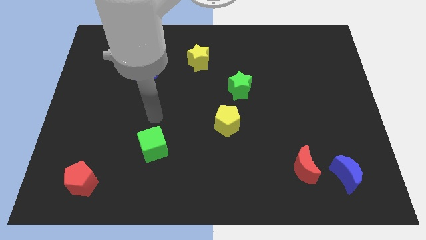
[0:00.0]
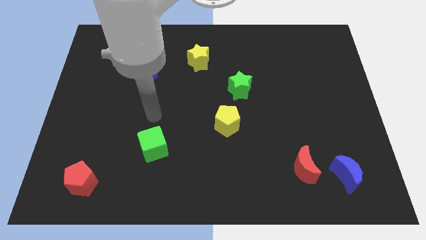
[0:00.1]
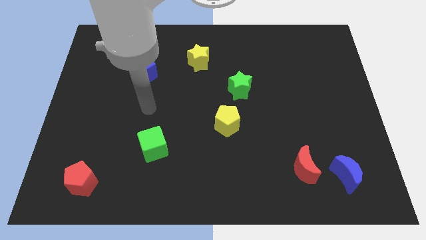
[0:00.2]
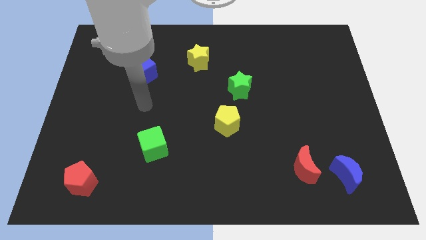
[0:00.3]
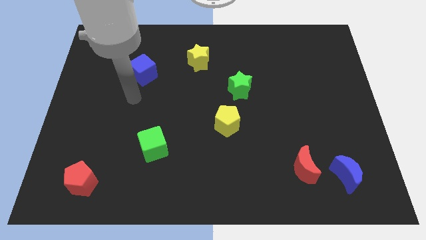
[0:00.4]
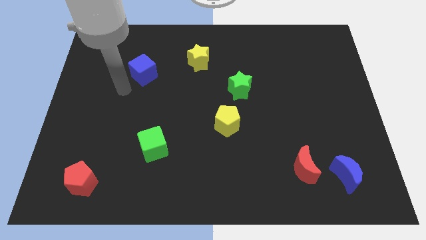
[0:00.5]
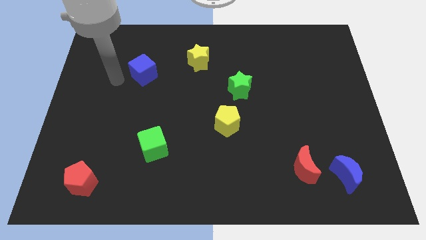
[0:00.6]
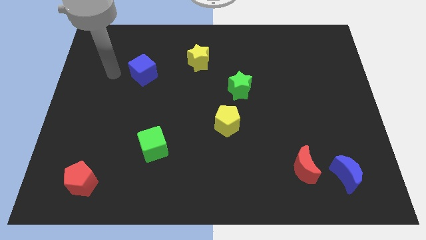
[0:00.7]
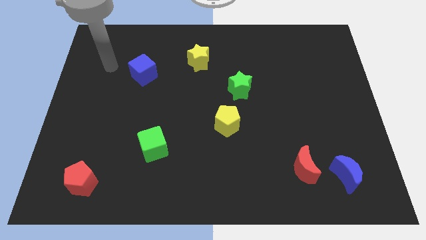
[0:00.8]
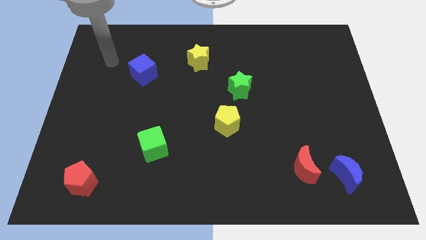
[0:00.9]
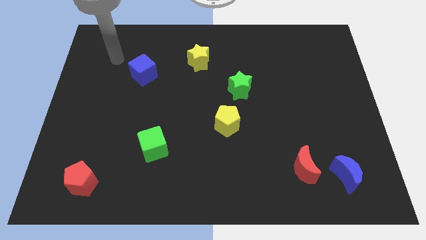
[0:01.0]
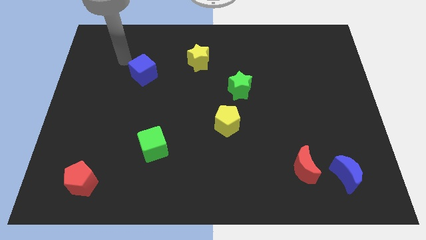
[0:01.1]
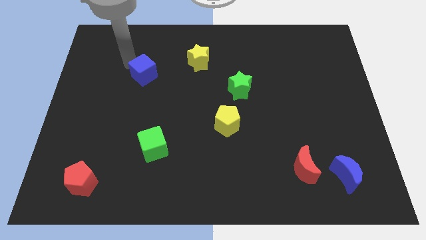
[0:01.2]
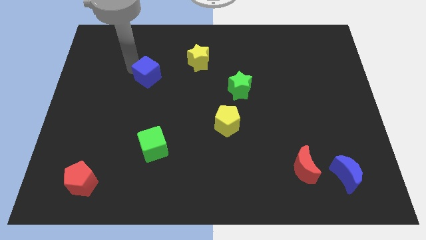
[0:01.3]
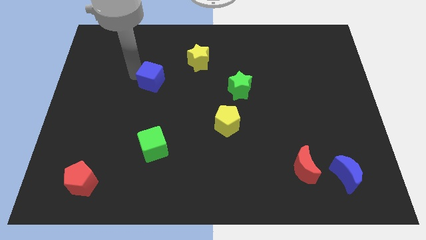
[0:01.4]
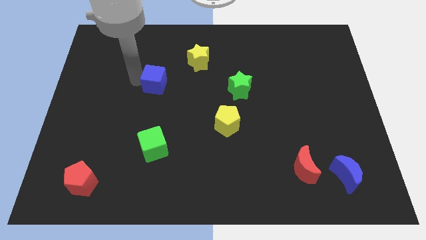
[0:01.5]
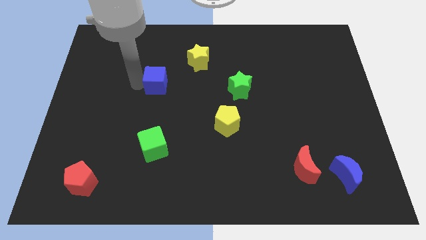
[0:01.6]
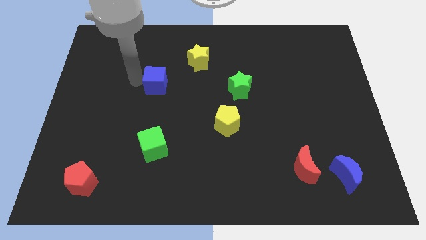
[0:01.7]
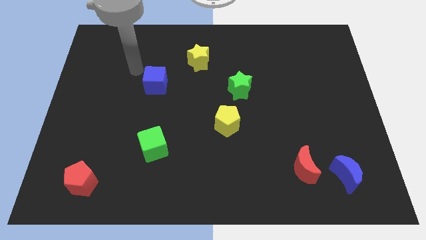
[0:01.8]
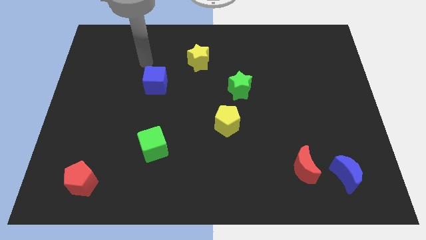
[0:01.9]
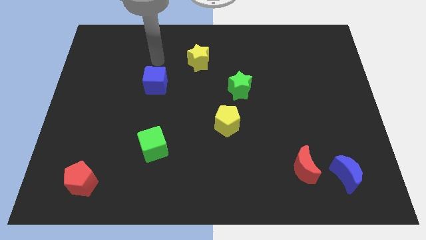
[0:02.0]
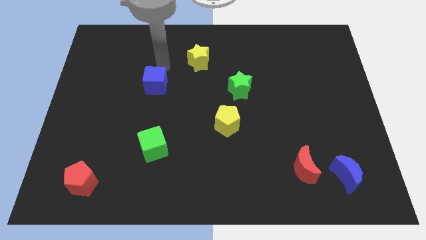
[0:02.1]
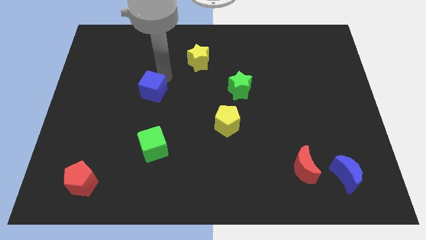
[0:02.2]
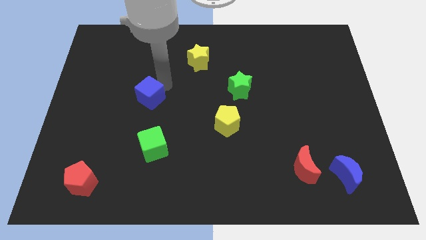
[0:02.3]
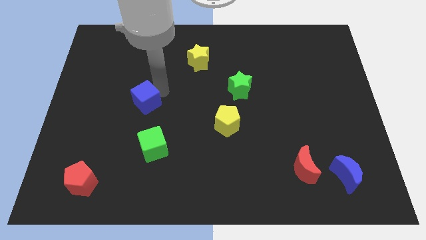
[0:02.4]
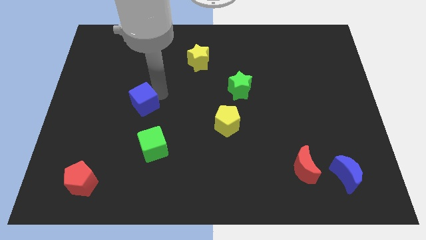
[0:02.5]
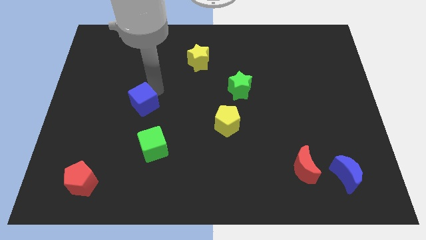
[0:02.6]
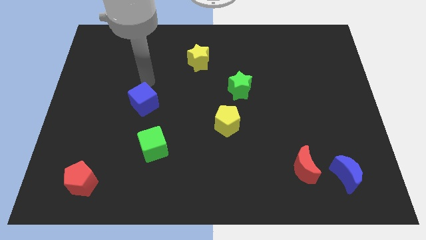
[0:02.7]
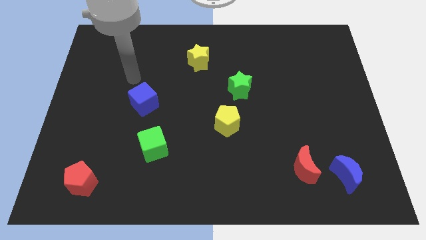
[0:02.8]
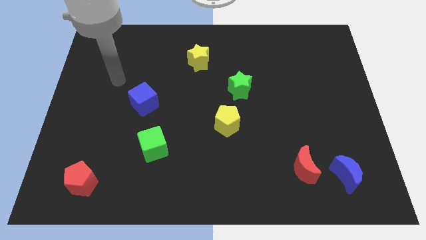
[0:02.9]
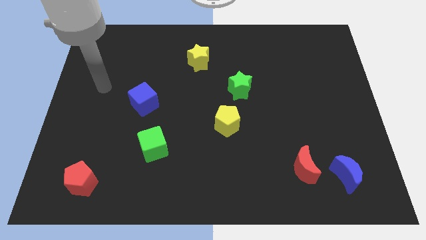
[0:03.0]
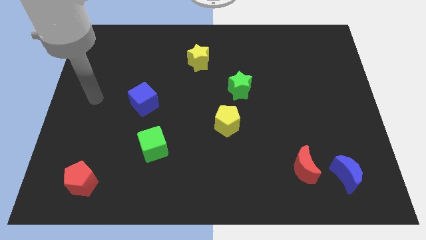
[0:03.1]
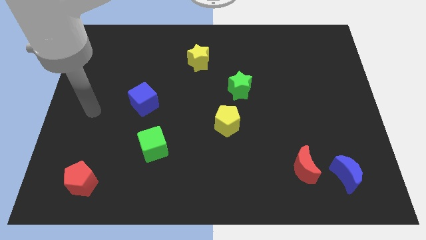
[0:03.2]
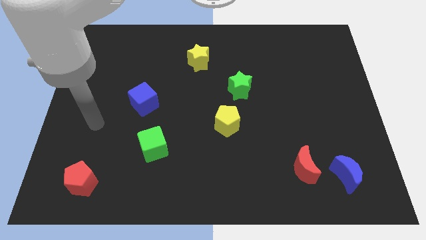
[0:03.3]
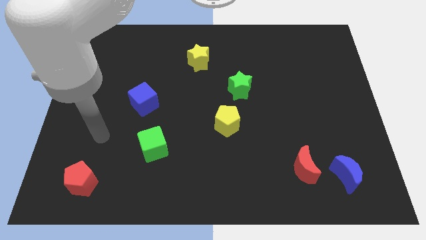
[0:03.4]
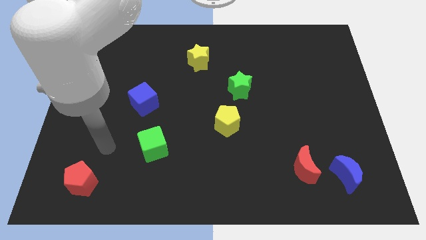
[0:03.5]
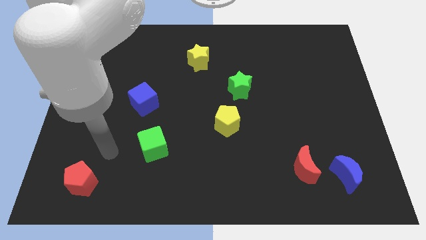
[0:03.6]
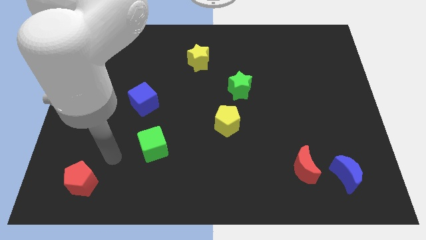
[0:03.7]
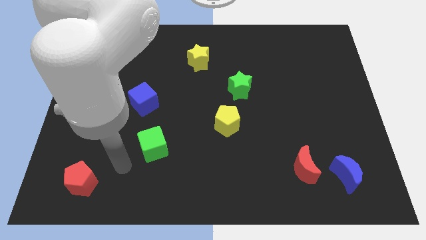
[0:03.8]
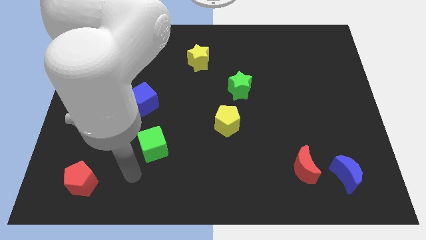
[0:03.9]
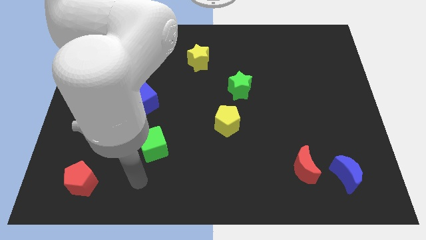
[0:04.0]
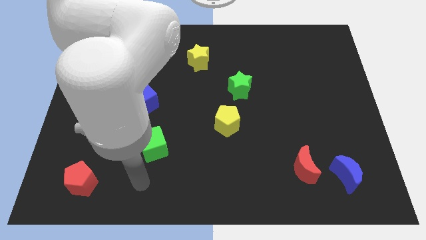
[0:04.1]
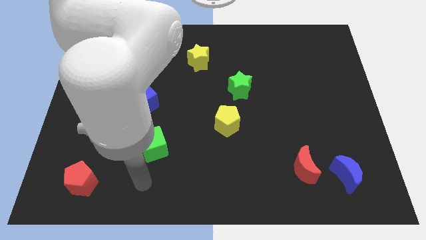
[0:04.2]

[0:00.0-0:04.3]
move the blue cube above to the green cube

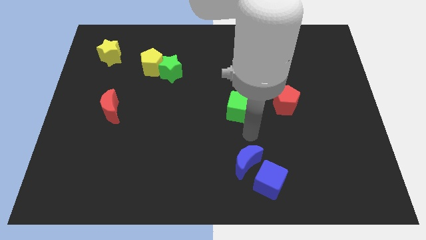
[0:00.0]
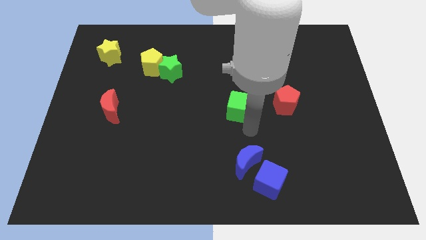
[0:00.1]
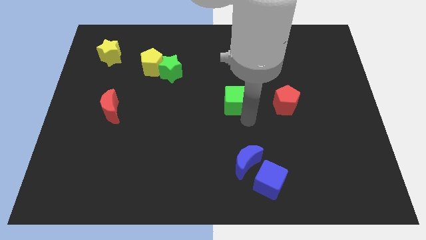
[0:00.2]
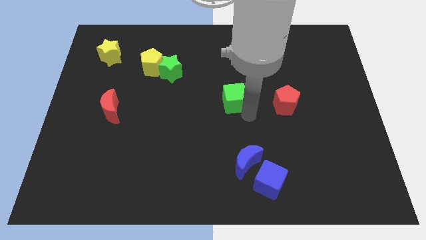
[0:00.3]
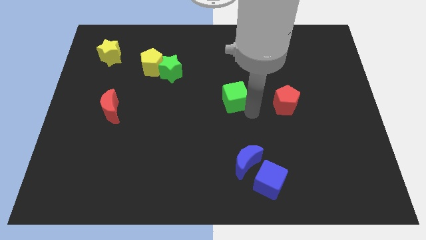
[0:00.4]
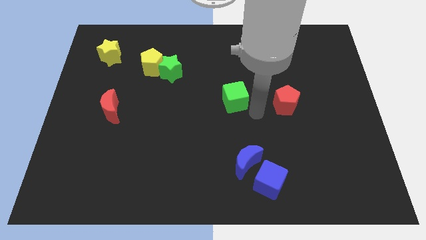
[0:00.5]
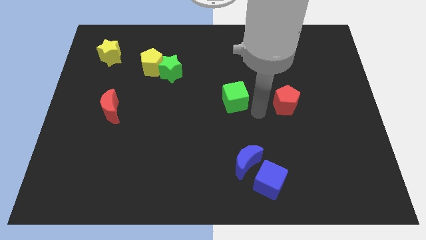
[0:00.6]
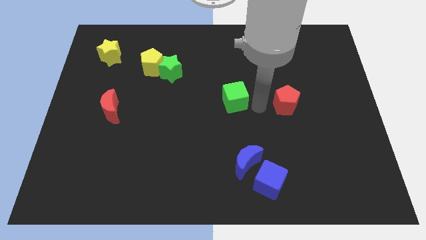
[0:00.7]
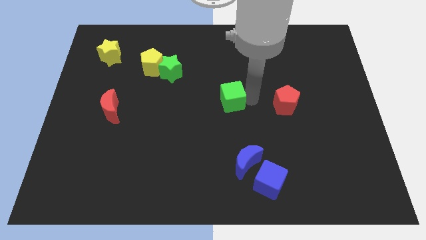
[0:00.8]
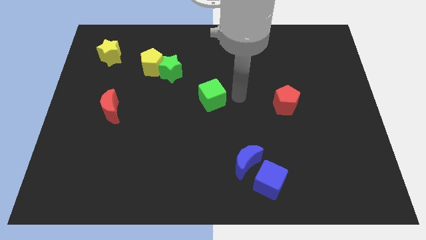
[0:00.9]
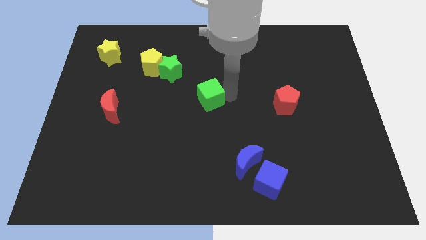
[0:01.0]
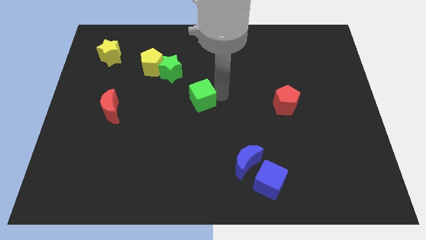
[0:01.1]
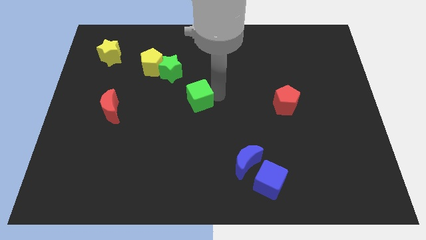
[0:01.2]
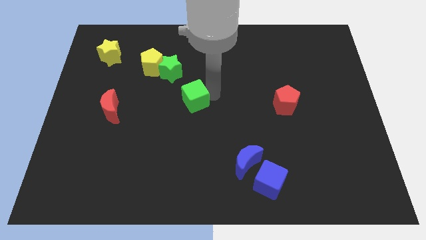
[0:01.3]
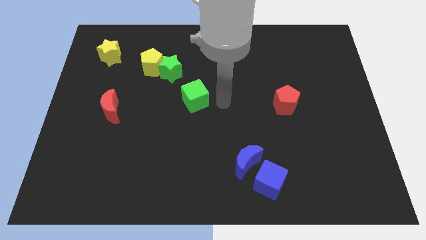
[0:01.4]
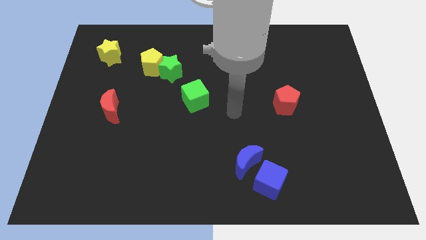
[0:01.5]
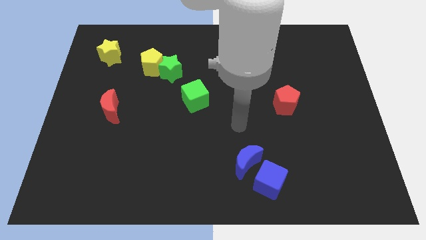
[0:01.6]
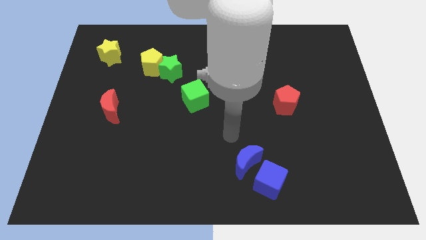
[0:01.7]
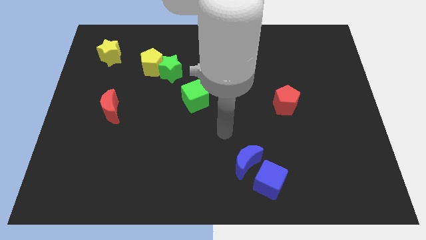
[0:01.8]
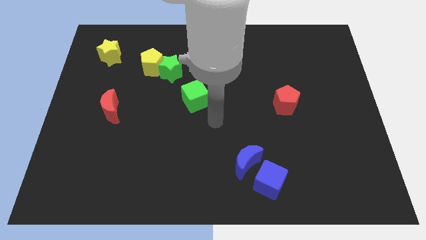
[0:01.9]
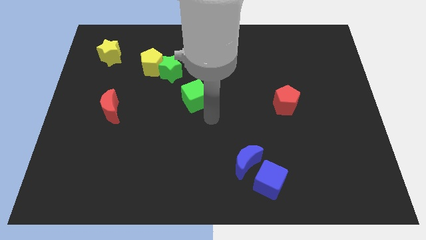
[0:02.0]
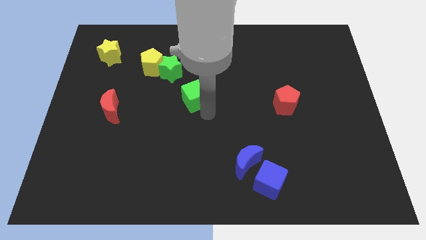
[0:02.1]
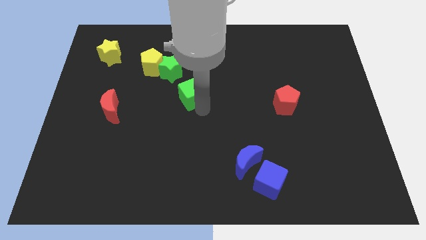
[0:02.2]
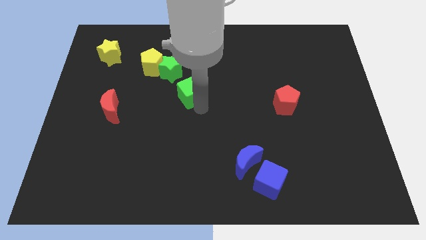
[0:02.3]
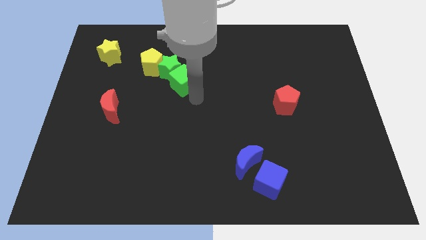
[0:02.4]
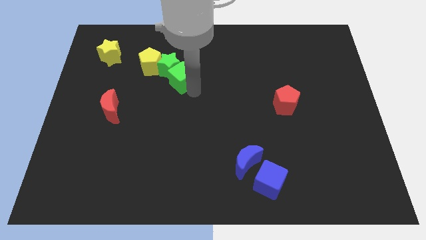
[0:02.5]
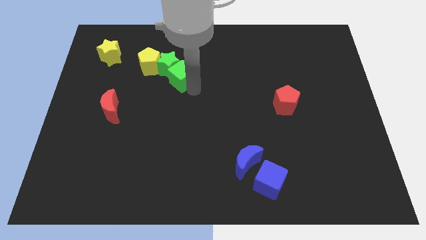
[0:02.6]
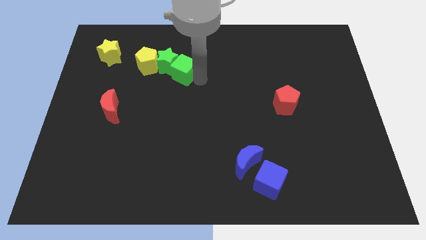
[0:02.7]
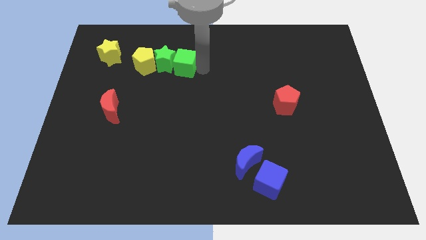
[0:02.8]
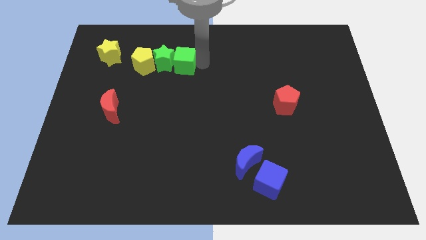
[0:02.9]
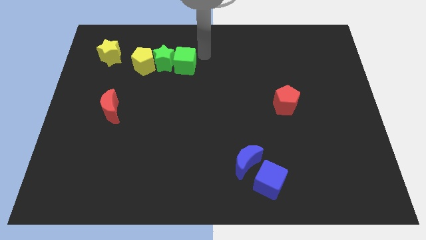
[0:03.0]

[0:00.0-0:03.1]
move the green cube towards the right of green star

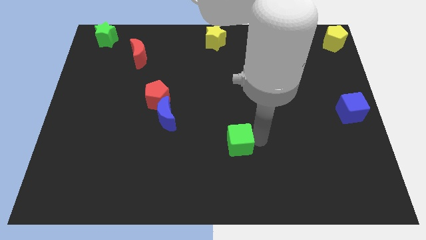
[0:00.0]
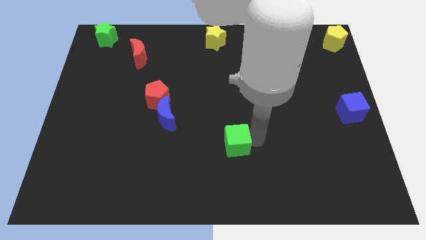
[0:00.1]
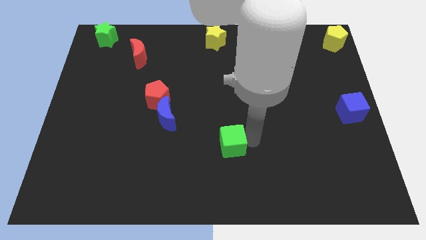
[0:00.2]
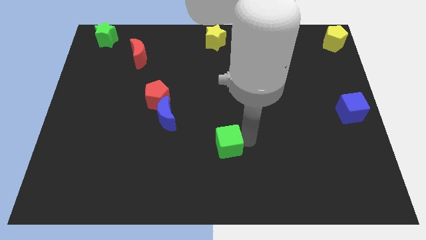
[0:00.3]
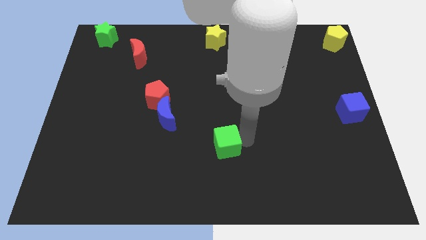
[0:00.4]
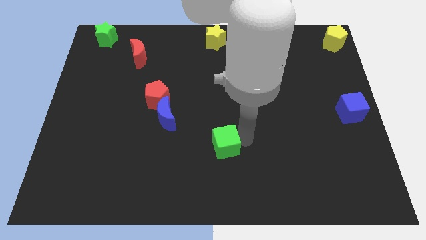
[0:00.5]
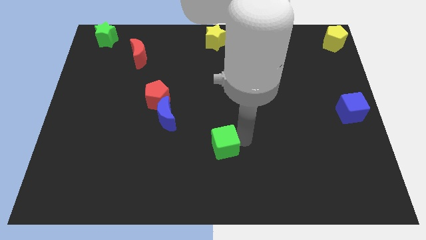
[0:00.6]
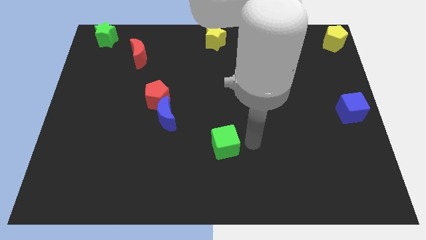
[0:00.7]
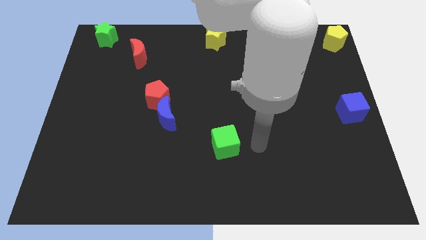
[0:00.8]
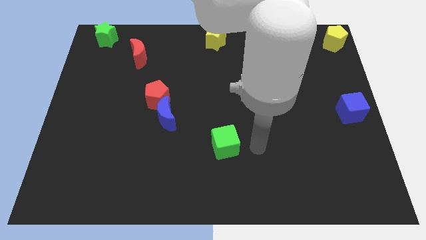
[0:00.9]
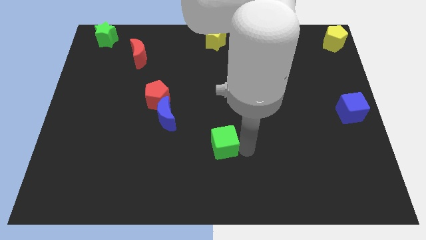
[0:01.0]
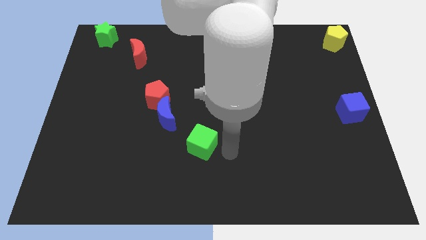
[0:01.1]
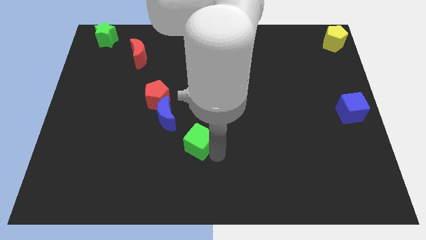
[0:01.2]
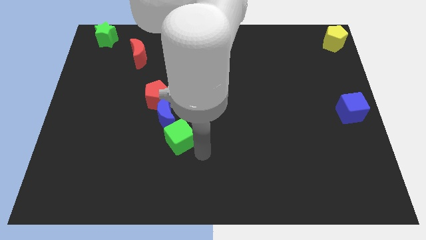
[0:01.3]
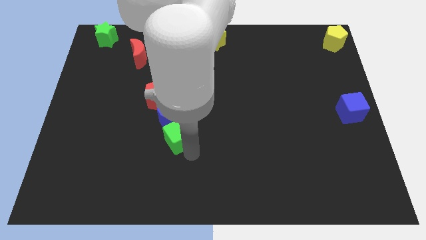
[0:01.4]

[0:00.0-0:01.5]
place green cube to the bottom of blue moon
